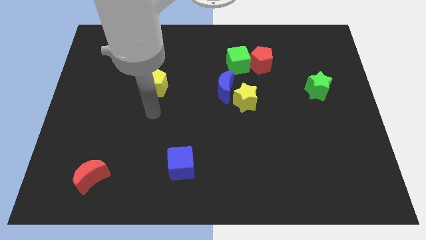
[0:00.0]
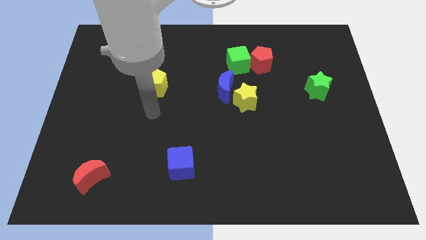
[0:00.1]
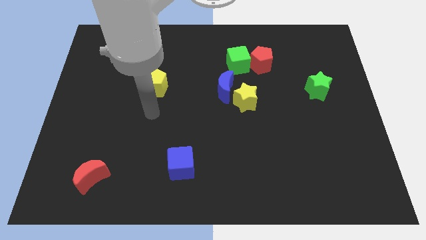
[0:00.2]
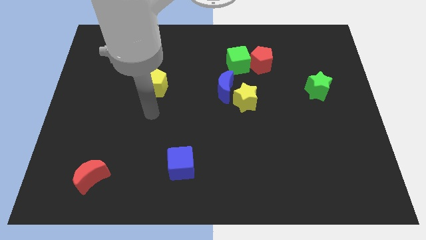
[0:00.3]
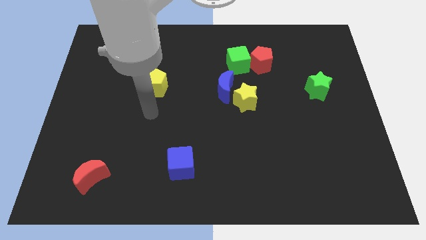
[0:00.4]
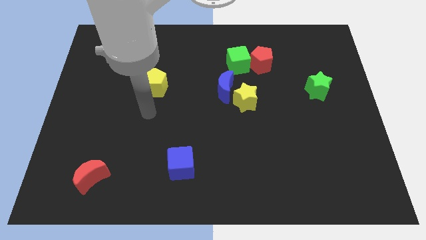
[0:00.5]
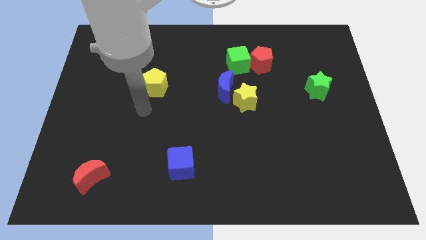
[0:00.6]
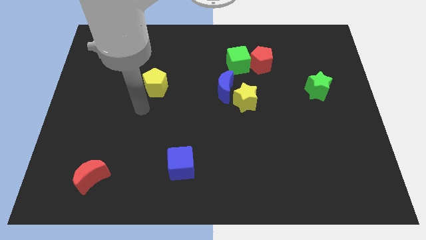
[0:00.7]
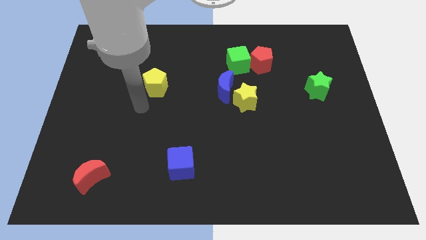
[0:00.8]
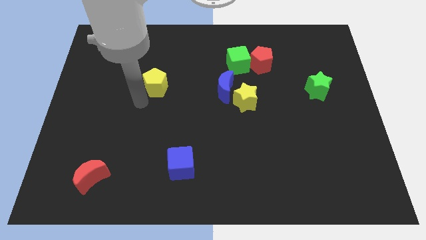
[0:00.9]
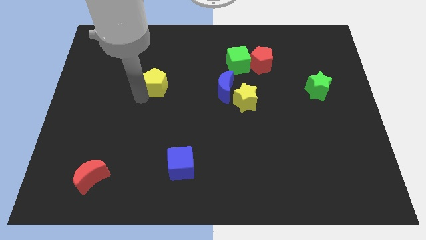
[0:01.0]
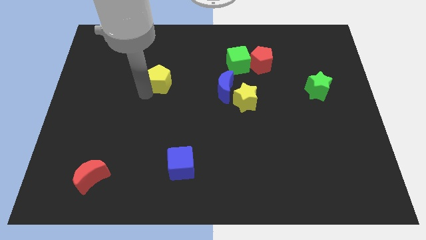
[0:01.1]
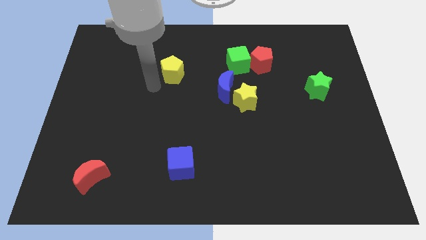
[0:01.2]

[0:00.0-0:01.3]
move the yellow pentagon slightly upwards

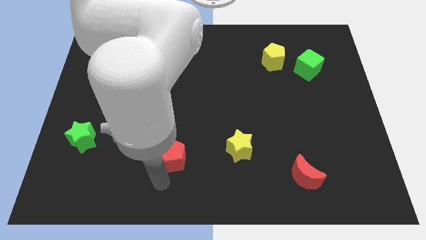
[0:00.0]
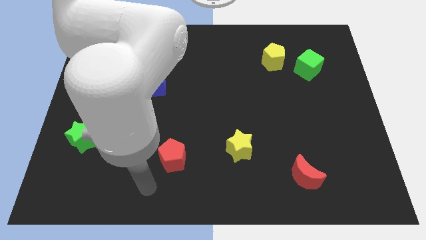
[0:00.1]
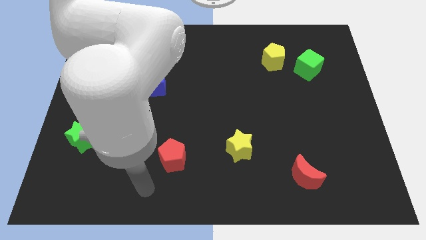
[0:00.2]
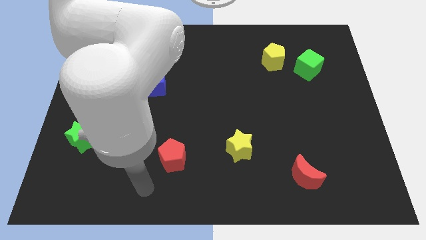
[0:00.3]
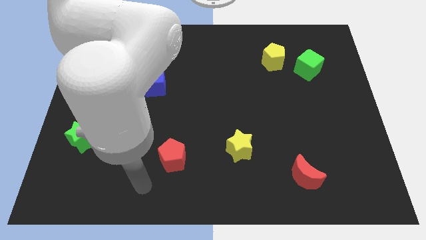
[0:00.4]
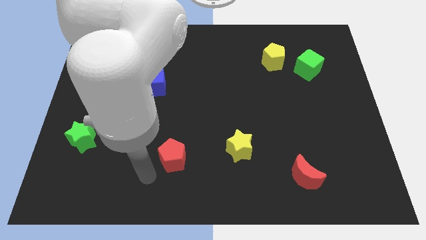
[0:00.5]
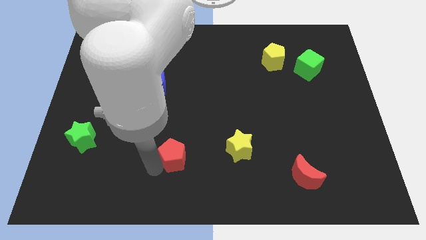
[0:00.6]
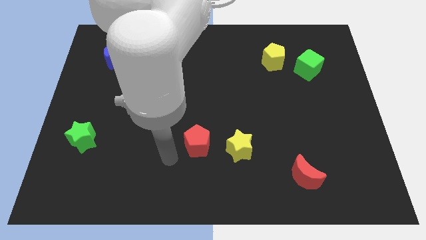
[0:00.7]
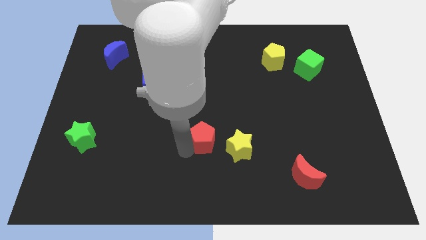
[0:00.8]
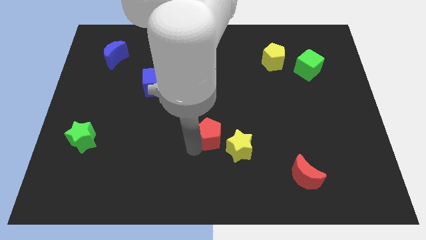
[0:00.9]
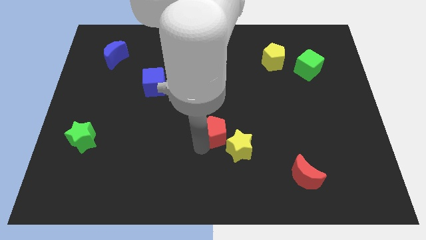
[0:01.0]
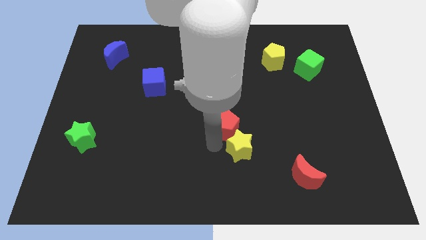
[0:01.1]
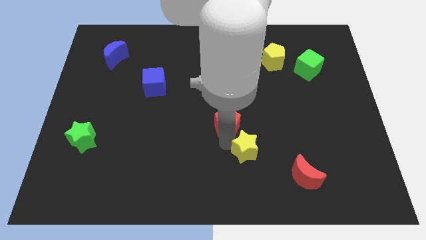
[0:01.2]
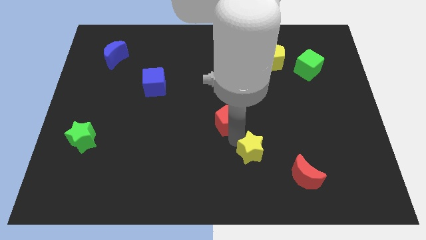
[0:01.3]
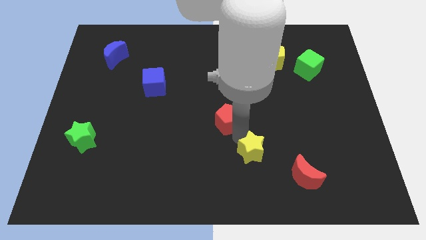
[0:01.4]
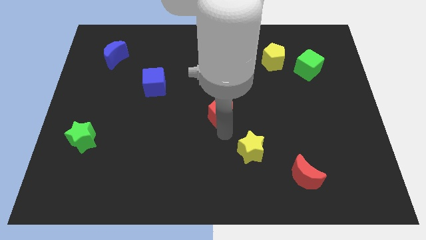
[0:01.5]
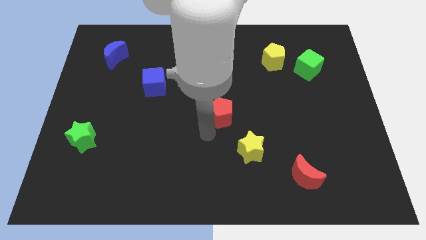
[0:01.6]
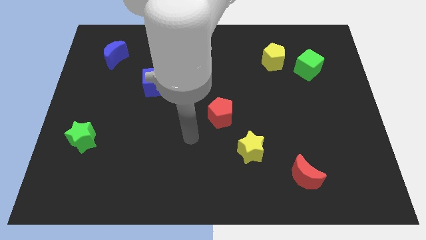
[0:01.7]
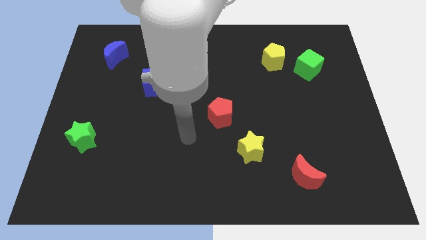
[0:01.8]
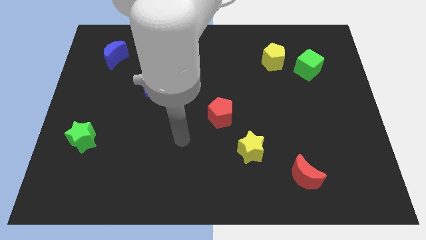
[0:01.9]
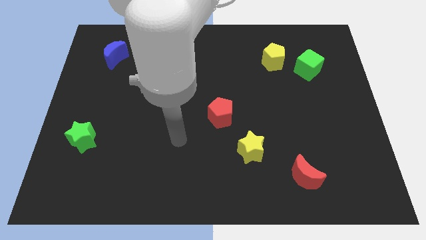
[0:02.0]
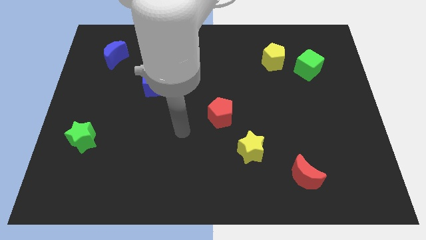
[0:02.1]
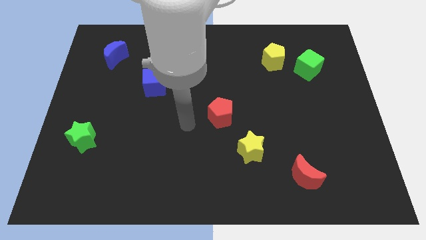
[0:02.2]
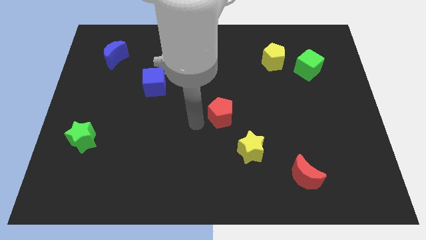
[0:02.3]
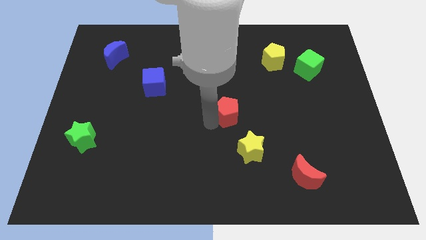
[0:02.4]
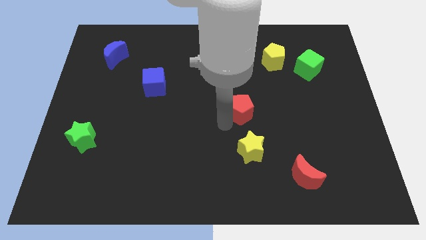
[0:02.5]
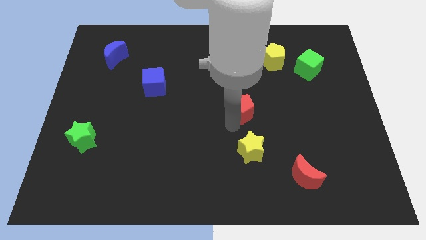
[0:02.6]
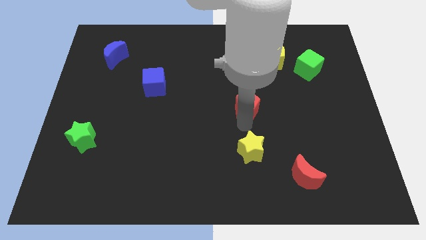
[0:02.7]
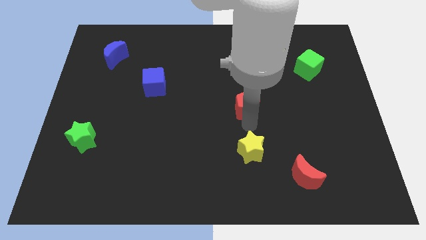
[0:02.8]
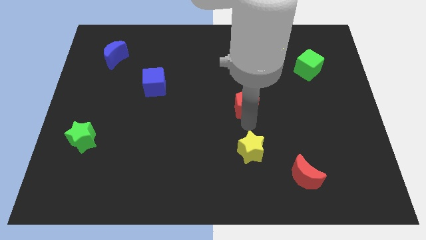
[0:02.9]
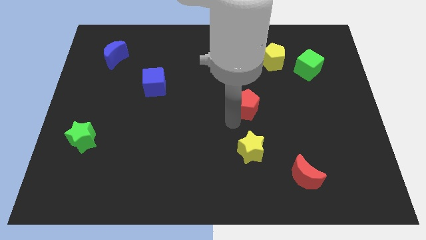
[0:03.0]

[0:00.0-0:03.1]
move red pentagon above yellow star

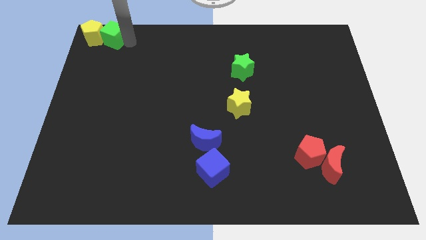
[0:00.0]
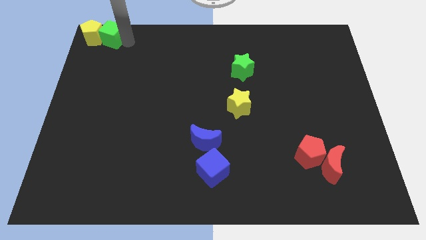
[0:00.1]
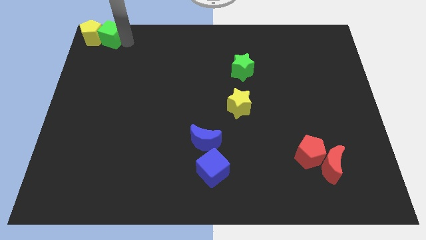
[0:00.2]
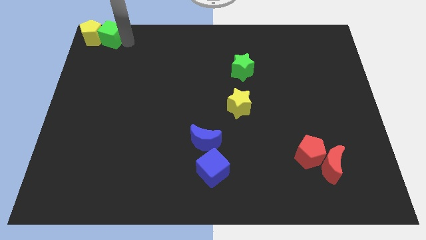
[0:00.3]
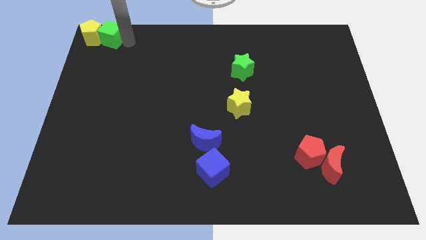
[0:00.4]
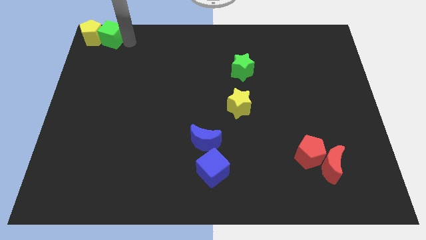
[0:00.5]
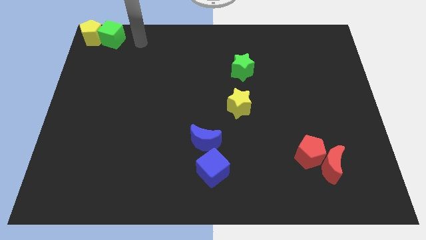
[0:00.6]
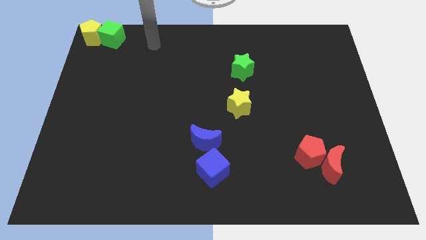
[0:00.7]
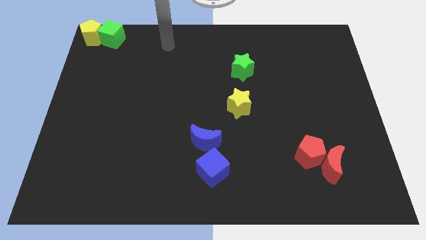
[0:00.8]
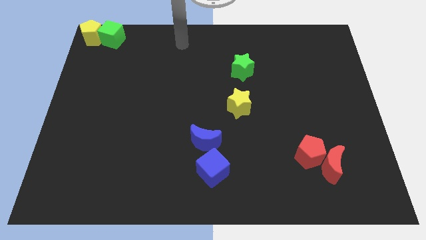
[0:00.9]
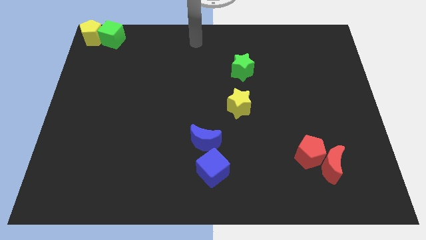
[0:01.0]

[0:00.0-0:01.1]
slide your arm towards top center

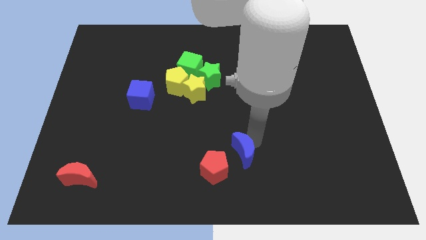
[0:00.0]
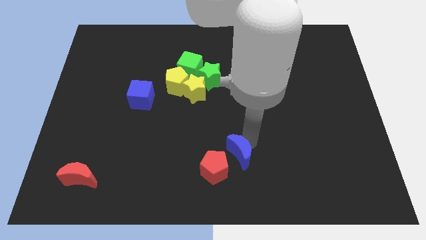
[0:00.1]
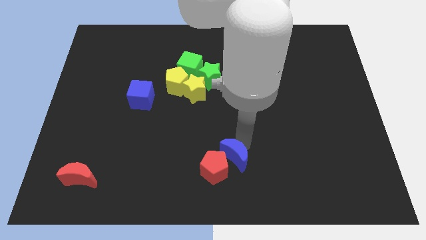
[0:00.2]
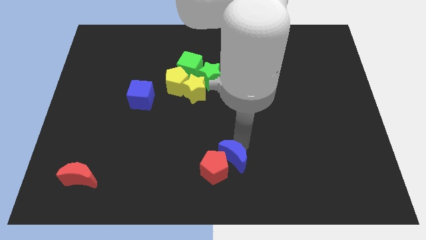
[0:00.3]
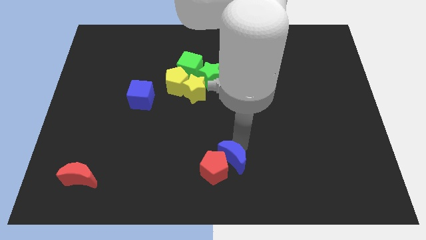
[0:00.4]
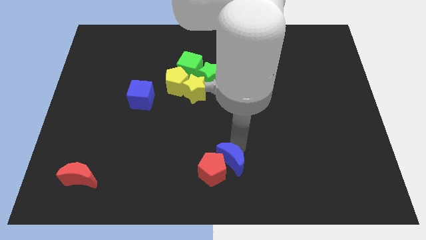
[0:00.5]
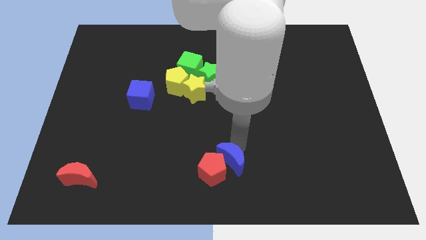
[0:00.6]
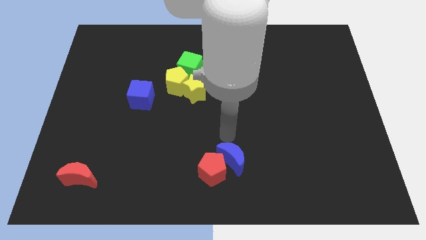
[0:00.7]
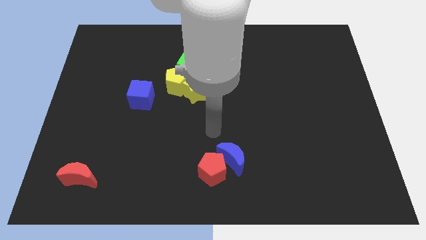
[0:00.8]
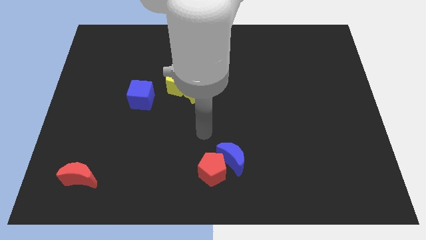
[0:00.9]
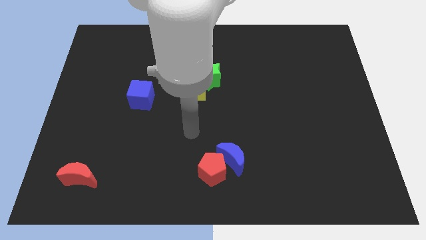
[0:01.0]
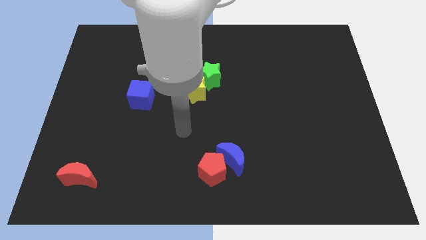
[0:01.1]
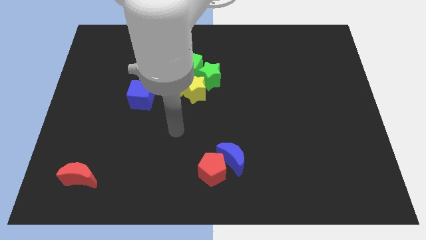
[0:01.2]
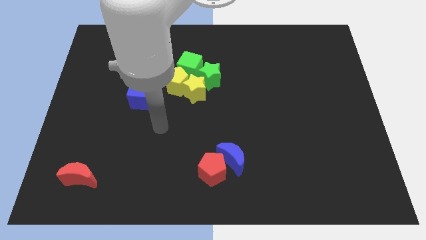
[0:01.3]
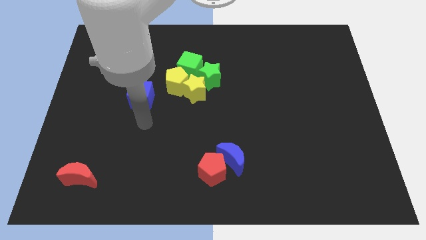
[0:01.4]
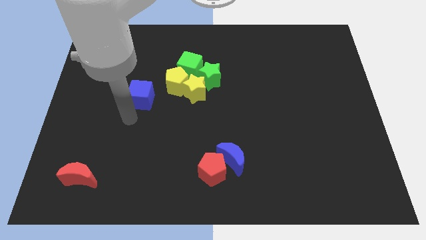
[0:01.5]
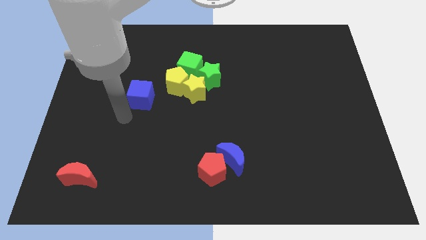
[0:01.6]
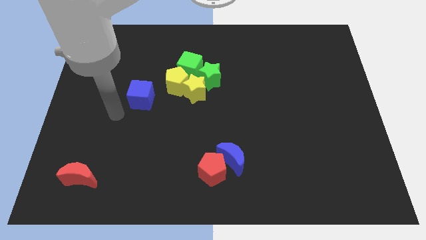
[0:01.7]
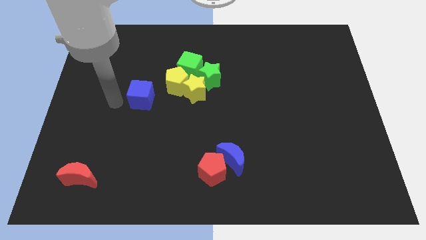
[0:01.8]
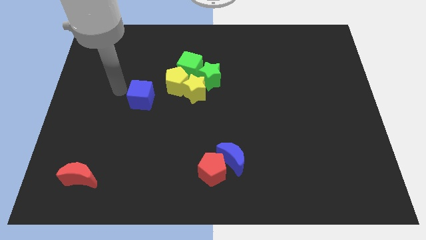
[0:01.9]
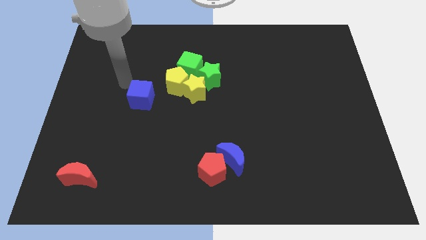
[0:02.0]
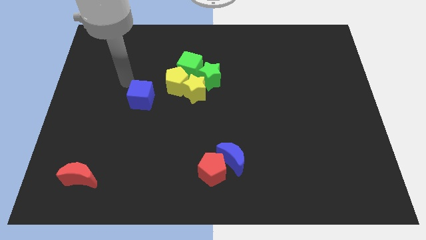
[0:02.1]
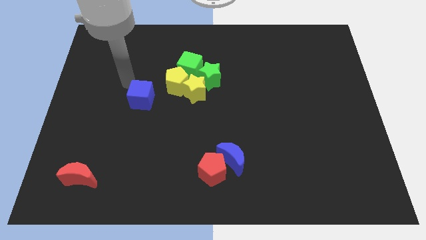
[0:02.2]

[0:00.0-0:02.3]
move blue moon right beside the red pentagon

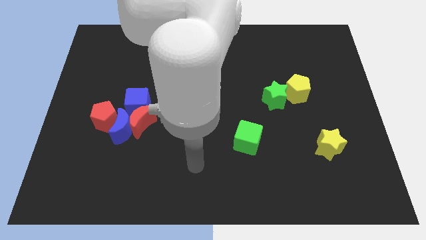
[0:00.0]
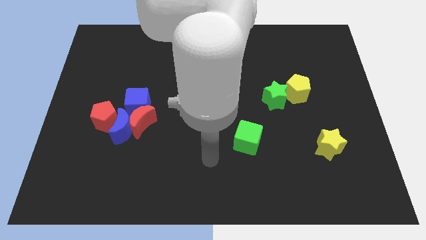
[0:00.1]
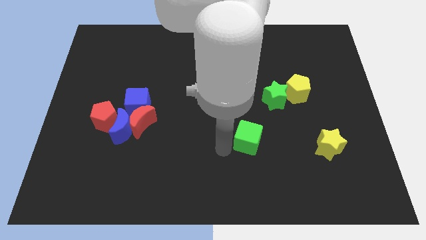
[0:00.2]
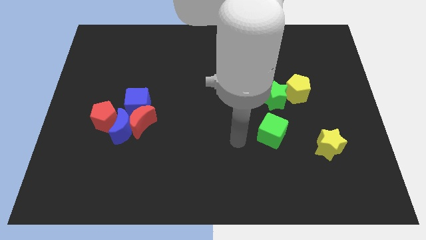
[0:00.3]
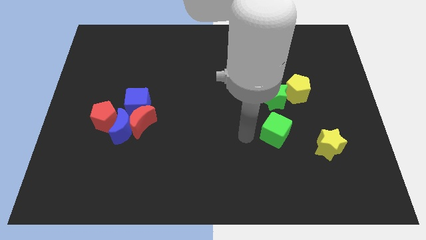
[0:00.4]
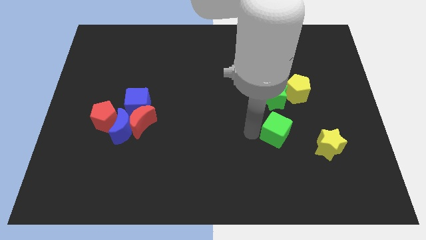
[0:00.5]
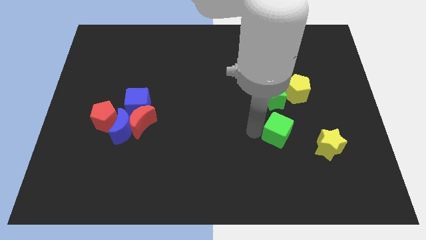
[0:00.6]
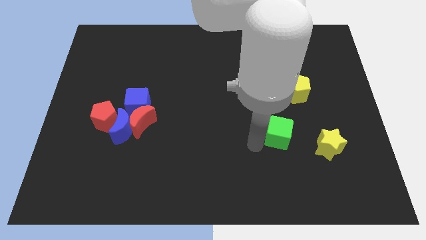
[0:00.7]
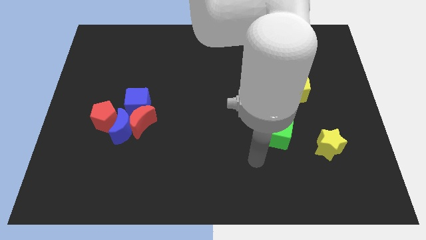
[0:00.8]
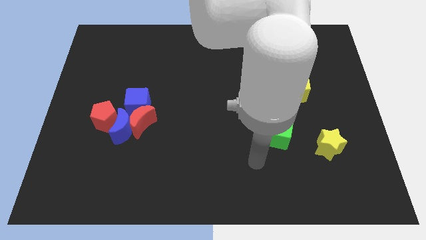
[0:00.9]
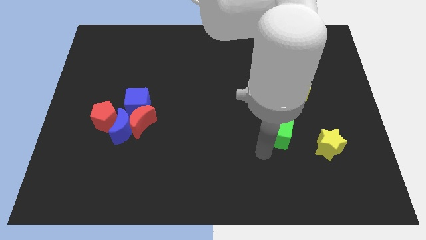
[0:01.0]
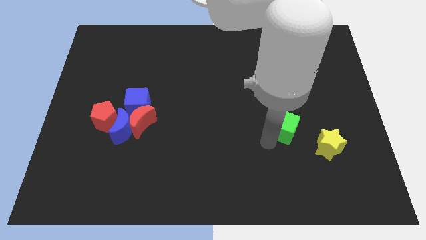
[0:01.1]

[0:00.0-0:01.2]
move the green cube below the green star

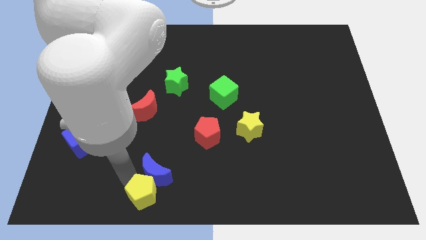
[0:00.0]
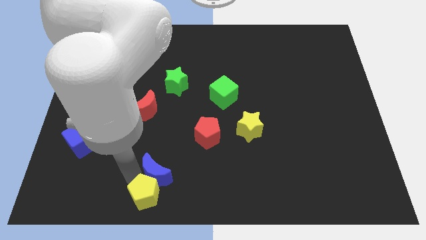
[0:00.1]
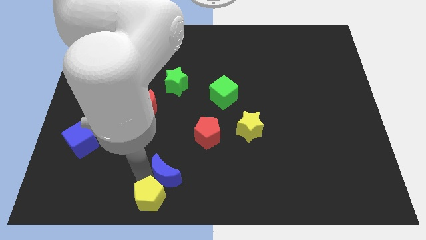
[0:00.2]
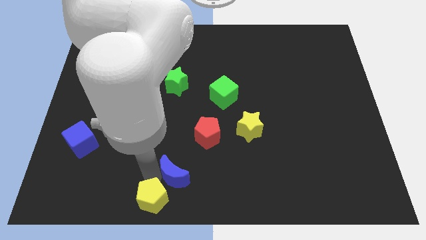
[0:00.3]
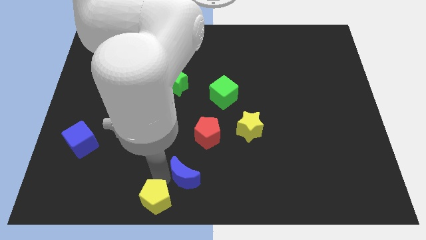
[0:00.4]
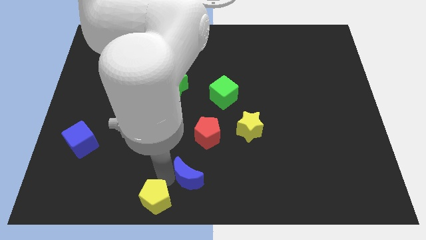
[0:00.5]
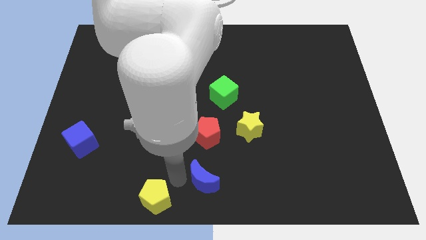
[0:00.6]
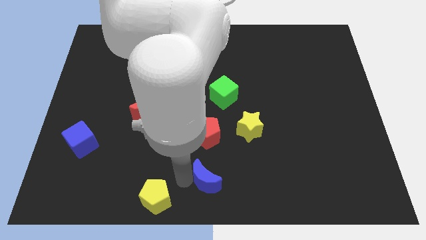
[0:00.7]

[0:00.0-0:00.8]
place blue crescent below red pentagon
